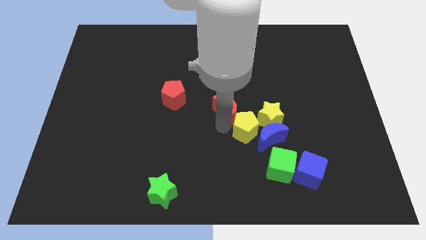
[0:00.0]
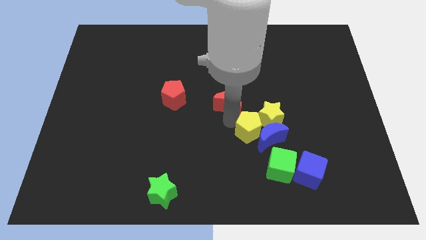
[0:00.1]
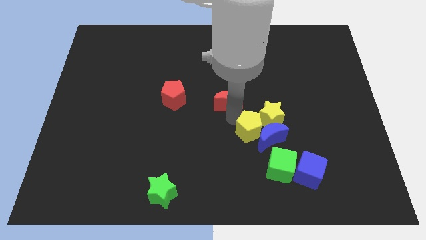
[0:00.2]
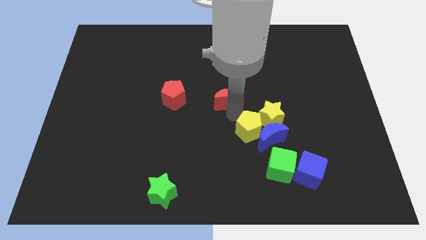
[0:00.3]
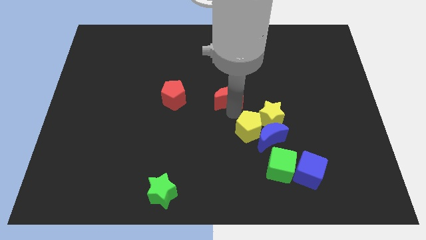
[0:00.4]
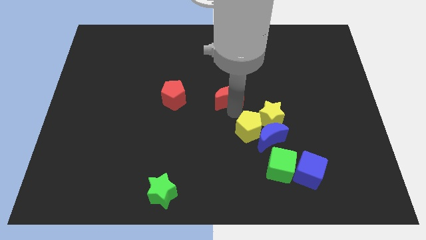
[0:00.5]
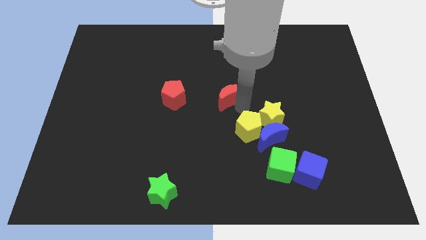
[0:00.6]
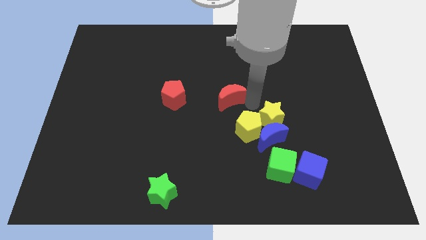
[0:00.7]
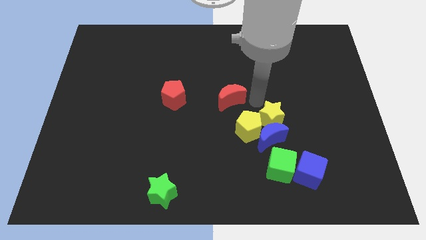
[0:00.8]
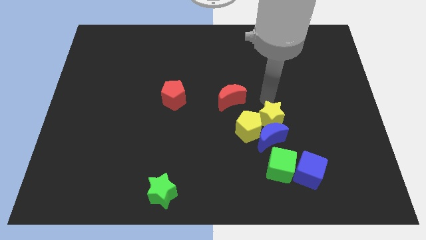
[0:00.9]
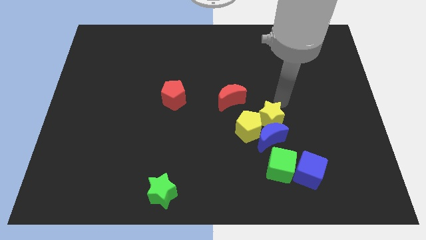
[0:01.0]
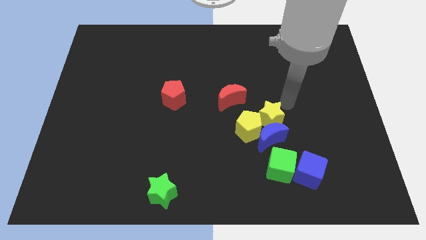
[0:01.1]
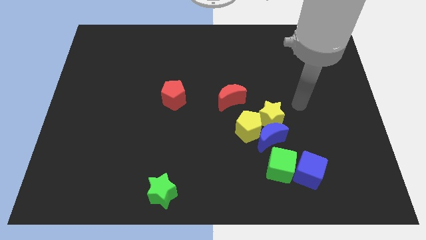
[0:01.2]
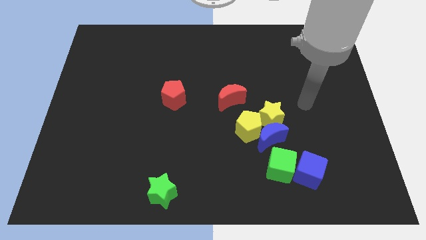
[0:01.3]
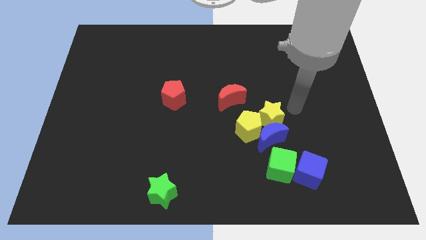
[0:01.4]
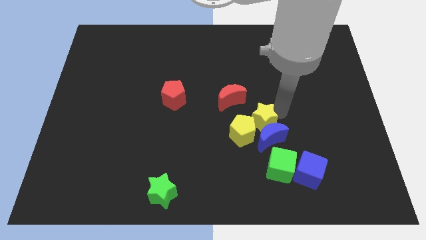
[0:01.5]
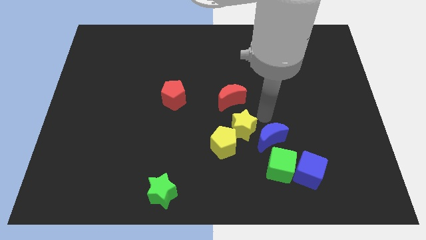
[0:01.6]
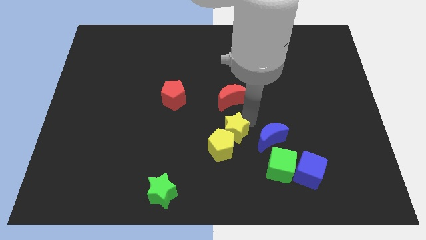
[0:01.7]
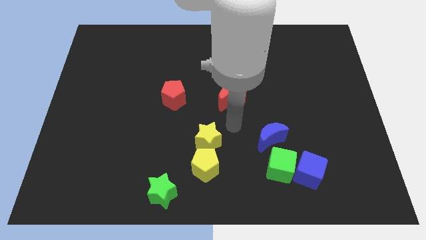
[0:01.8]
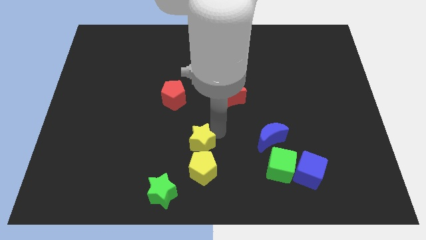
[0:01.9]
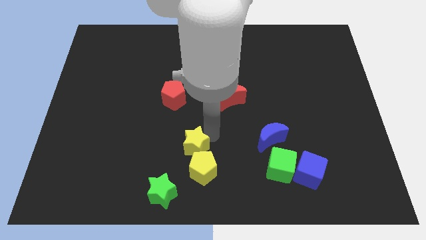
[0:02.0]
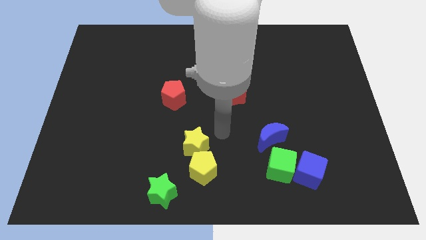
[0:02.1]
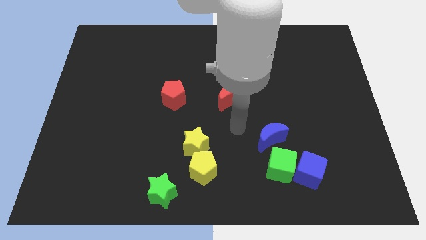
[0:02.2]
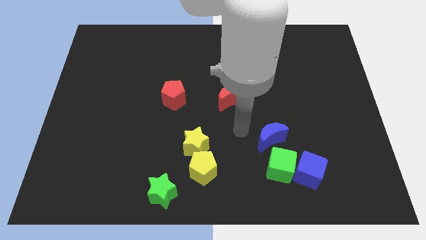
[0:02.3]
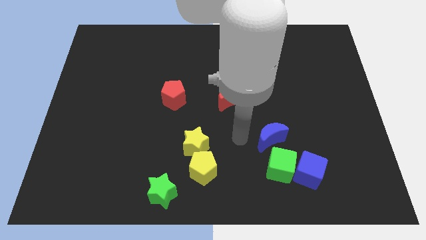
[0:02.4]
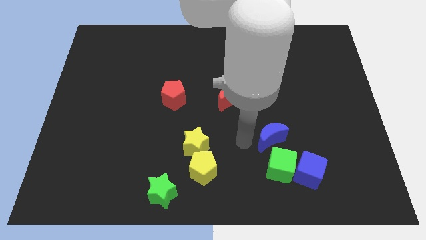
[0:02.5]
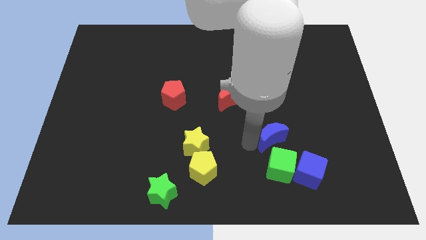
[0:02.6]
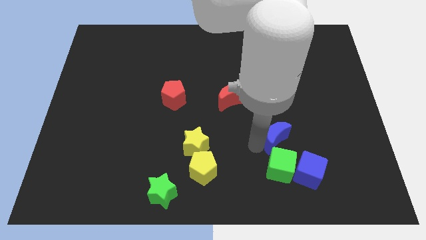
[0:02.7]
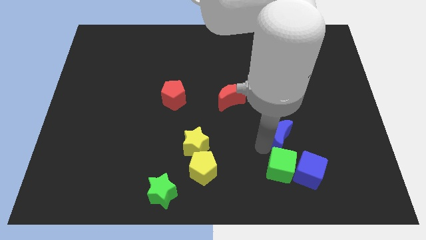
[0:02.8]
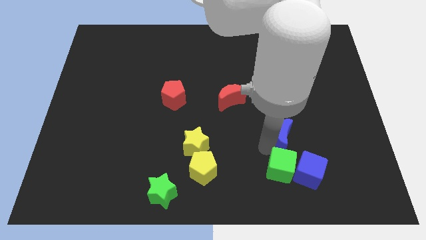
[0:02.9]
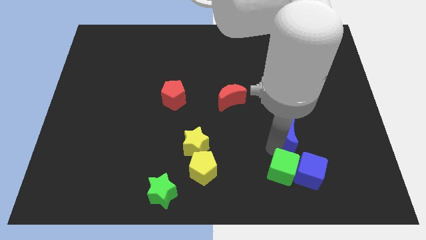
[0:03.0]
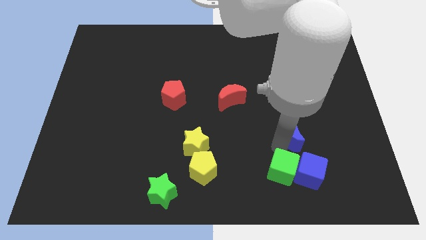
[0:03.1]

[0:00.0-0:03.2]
put the yellow blocks diagonally bottom left to the blue moon

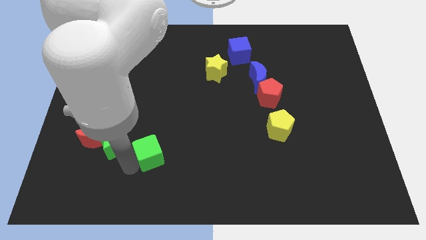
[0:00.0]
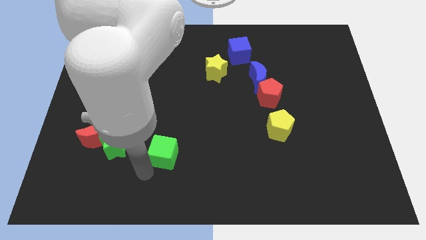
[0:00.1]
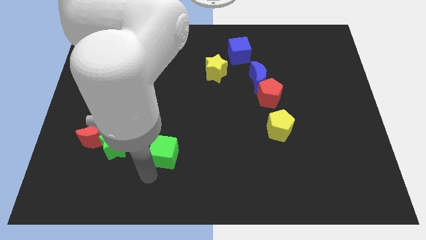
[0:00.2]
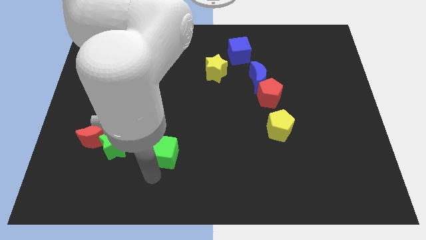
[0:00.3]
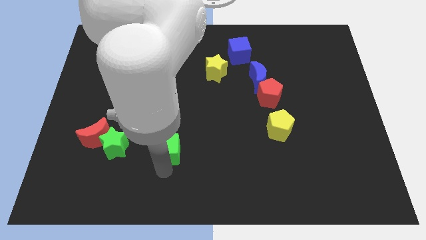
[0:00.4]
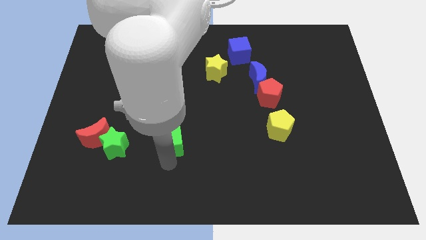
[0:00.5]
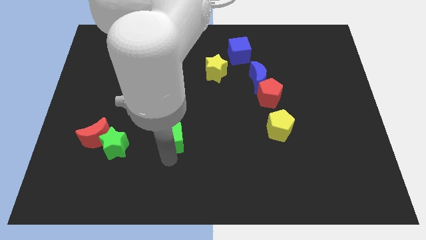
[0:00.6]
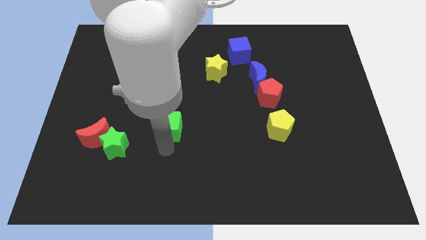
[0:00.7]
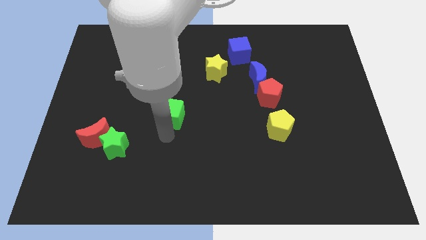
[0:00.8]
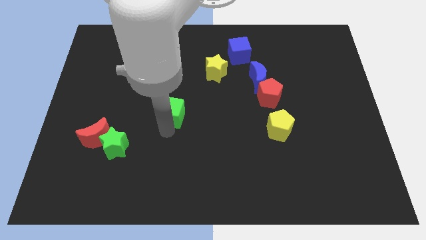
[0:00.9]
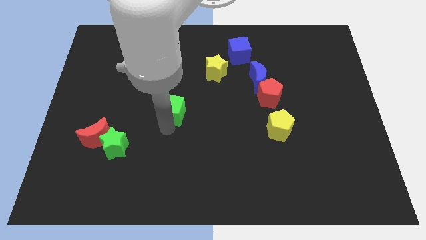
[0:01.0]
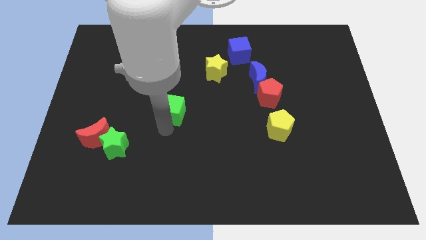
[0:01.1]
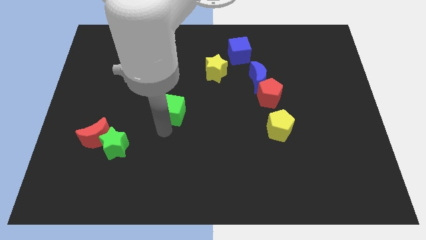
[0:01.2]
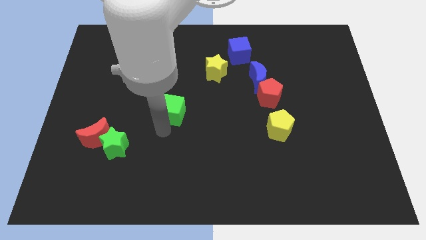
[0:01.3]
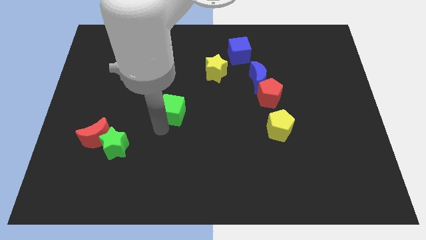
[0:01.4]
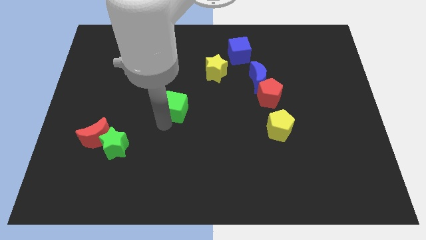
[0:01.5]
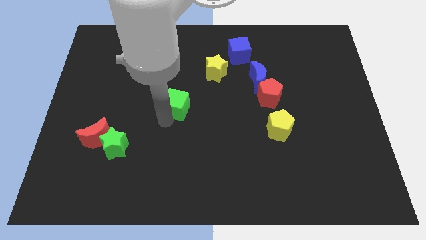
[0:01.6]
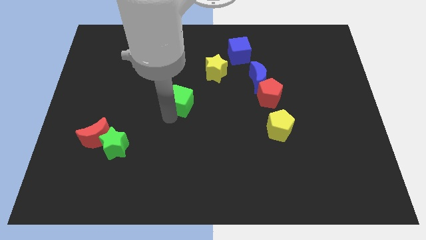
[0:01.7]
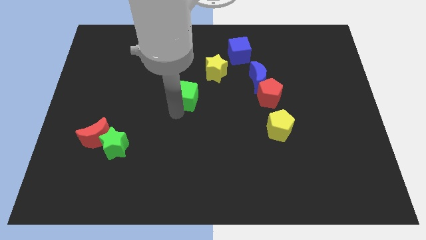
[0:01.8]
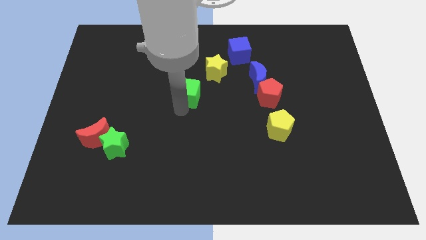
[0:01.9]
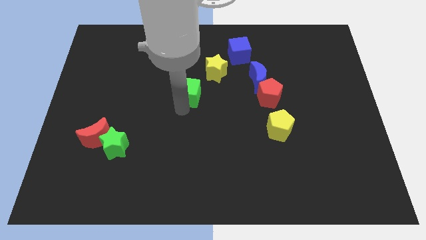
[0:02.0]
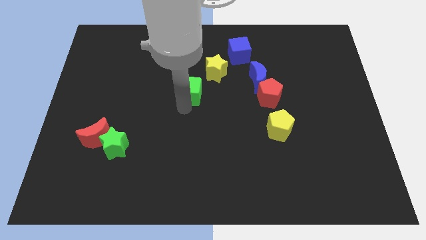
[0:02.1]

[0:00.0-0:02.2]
push the green cube towards the center of the board

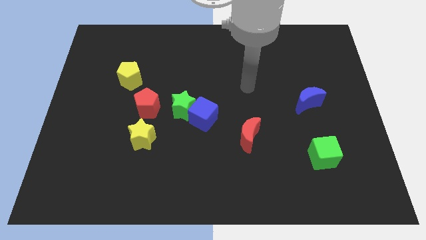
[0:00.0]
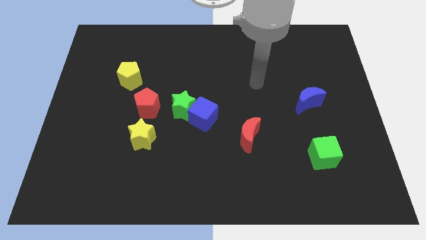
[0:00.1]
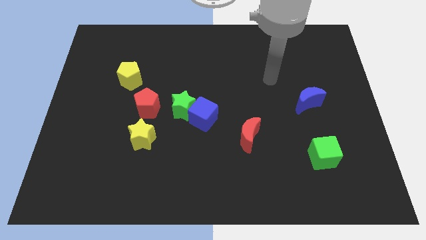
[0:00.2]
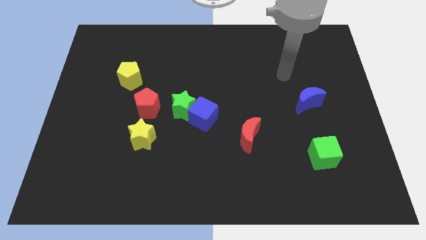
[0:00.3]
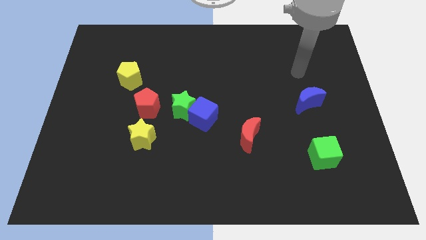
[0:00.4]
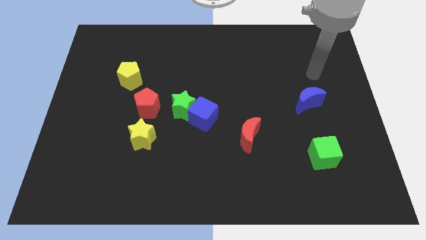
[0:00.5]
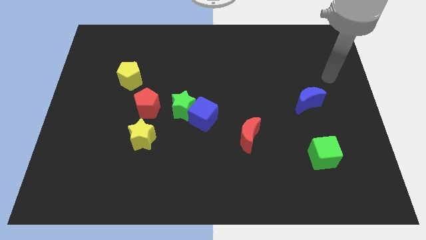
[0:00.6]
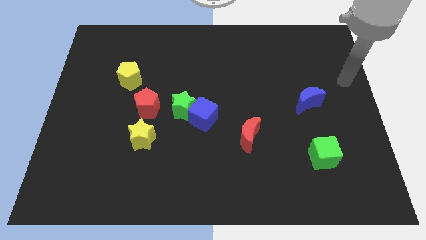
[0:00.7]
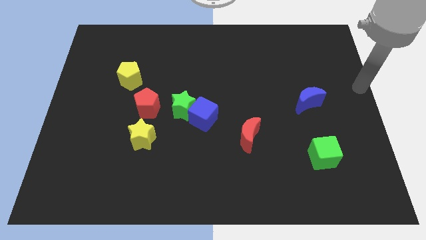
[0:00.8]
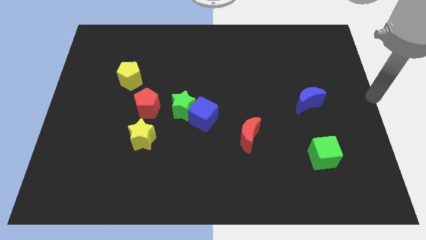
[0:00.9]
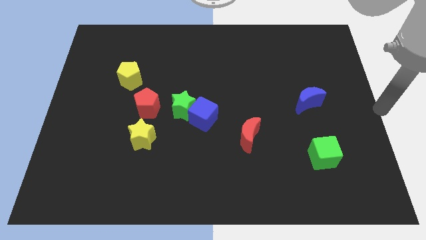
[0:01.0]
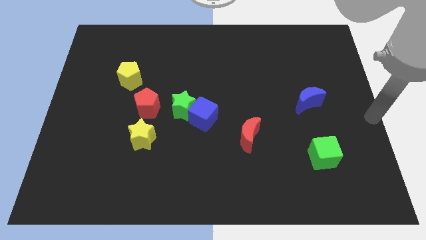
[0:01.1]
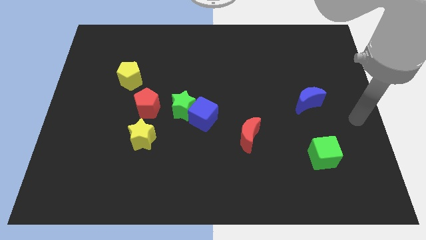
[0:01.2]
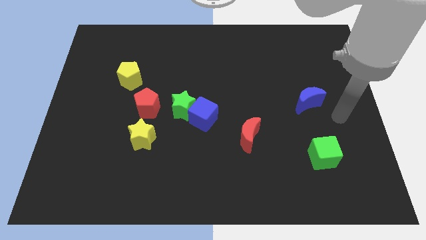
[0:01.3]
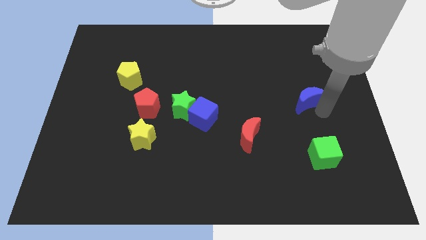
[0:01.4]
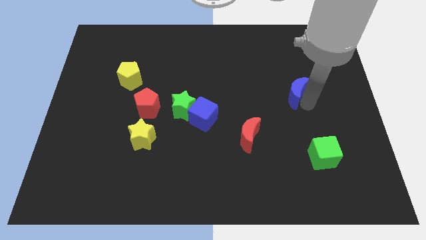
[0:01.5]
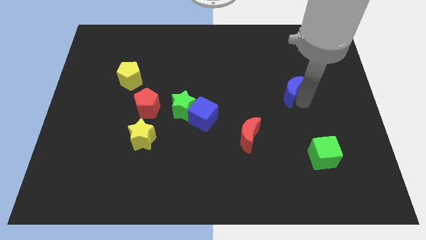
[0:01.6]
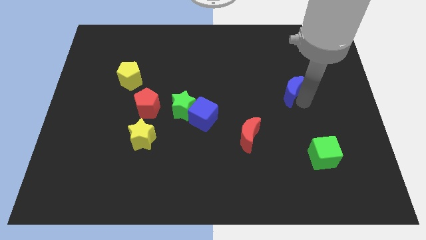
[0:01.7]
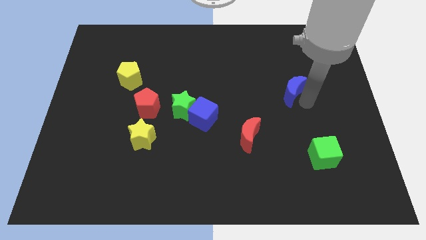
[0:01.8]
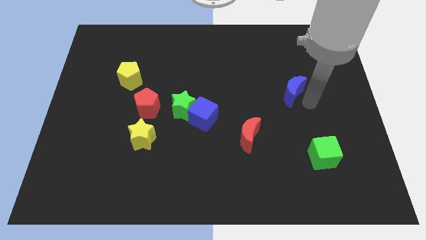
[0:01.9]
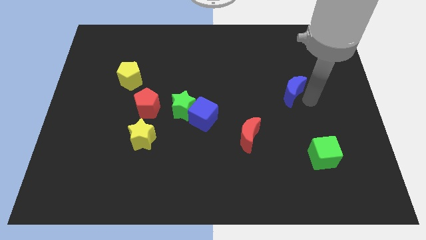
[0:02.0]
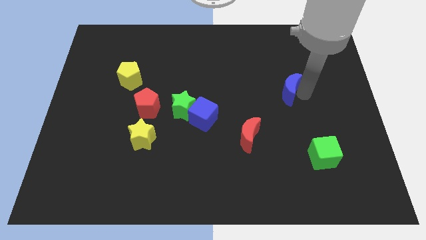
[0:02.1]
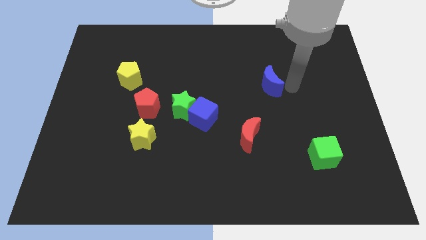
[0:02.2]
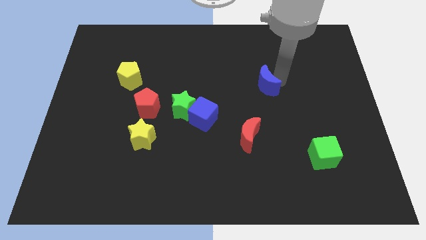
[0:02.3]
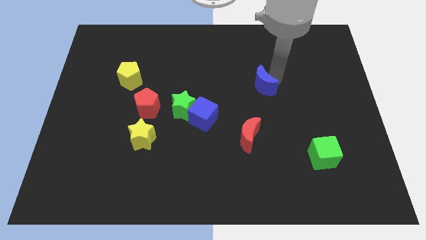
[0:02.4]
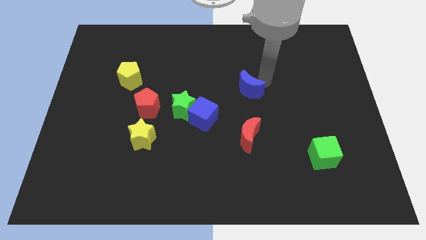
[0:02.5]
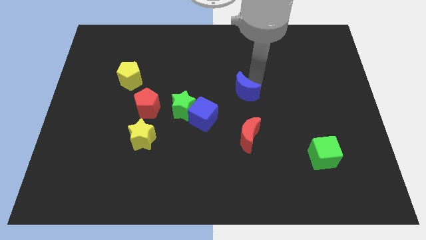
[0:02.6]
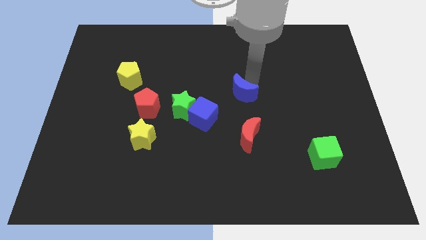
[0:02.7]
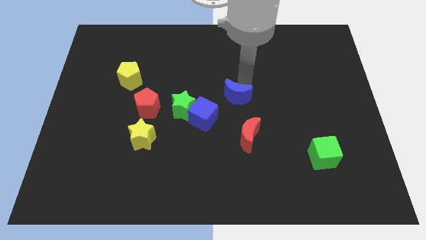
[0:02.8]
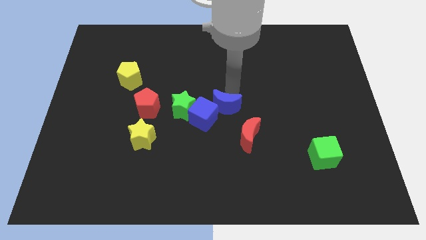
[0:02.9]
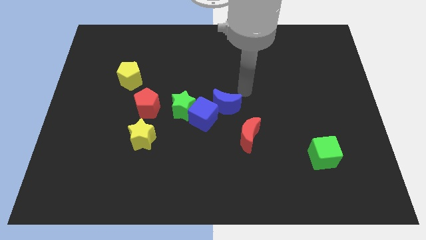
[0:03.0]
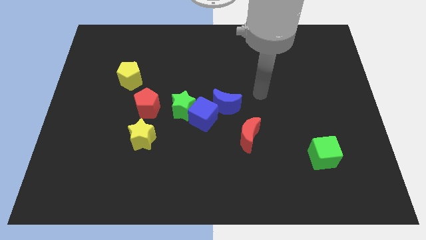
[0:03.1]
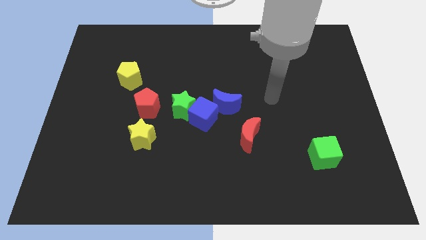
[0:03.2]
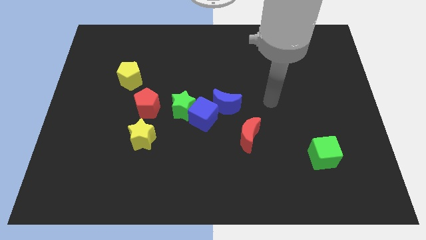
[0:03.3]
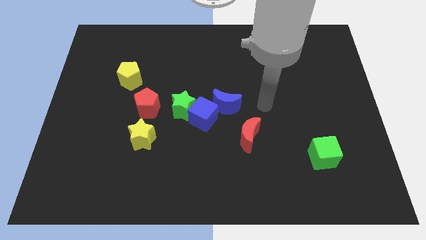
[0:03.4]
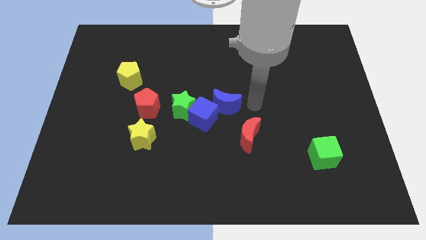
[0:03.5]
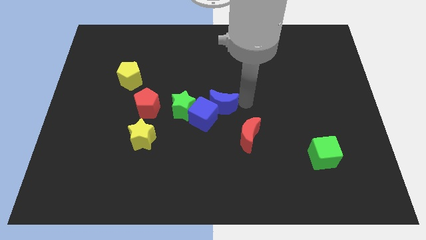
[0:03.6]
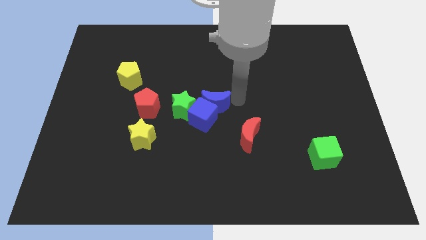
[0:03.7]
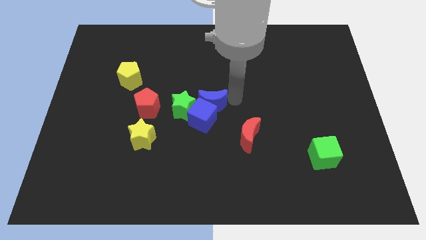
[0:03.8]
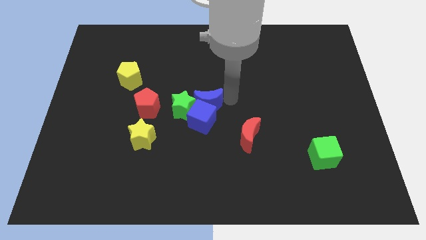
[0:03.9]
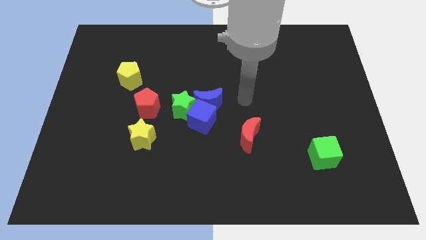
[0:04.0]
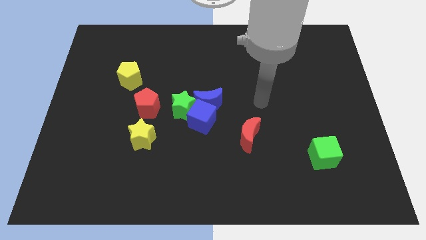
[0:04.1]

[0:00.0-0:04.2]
place the blue moon above the blue cube
